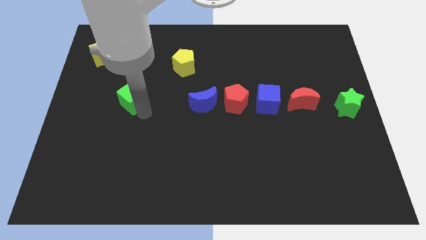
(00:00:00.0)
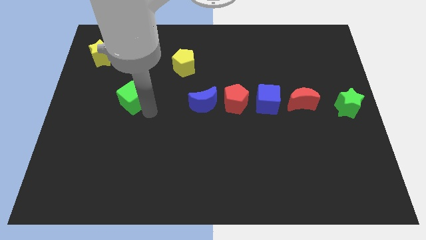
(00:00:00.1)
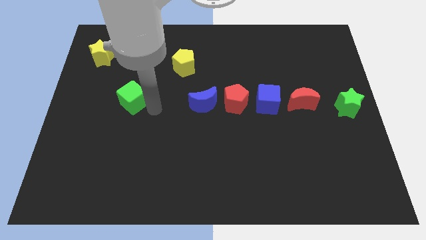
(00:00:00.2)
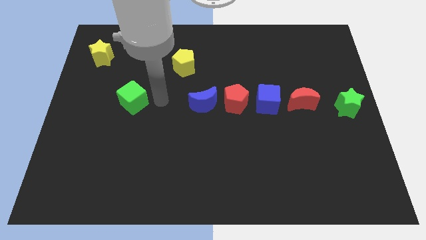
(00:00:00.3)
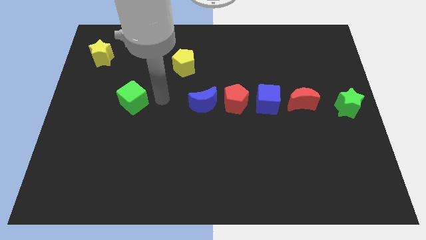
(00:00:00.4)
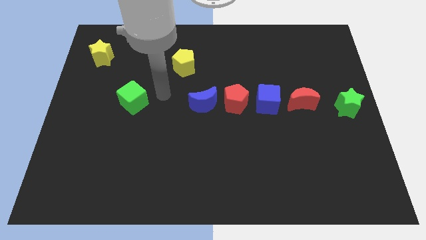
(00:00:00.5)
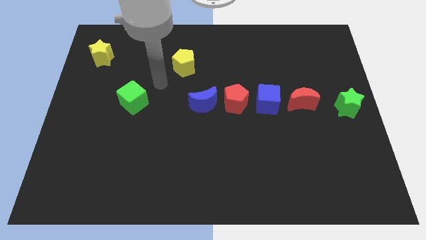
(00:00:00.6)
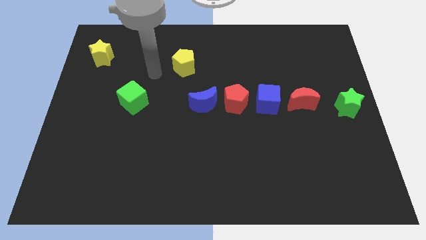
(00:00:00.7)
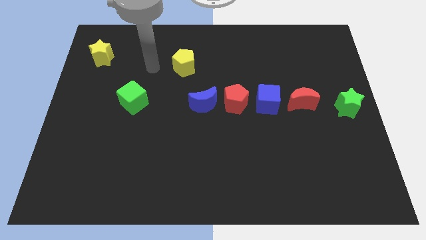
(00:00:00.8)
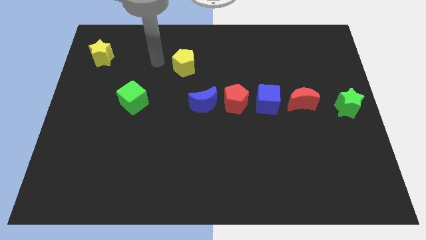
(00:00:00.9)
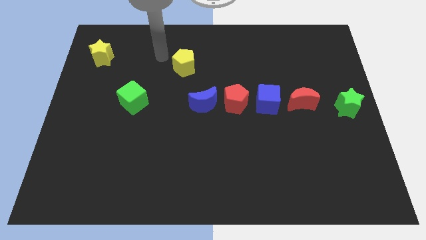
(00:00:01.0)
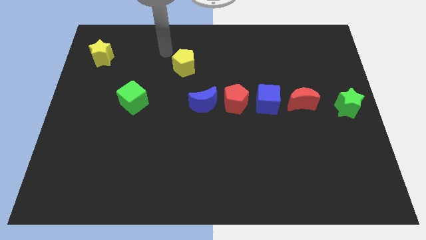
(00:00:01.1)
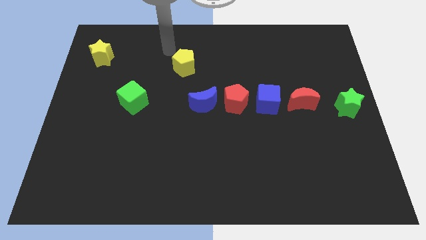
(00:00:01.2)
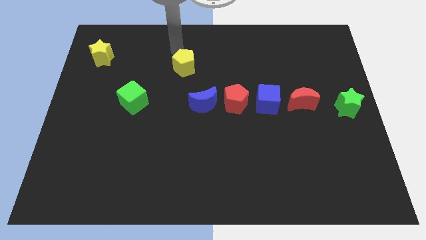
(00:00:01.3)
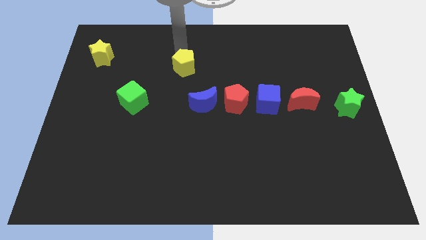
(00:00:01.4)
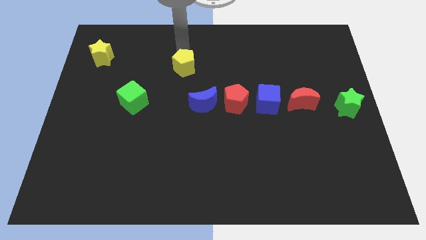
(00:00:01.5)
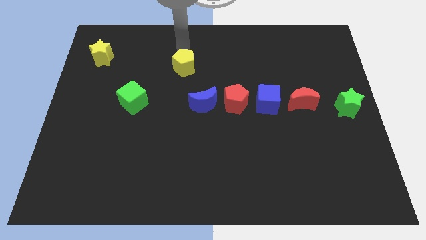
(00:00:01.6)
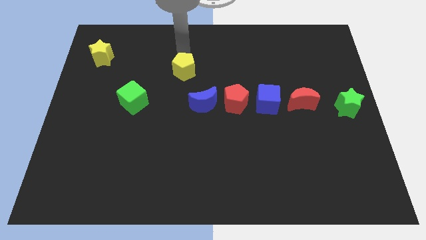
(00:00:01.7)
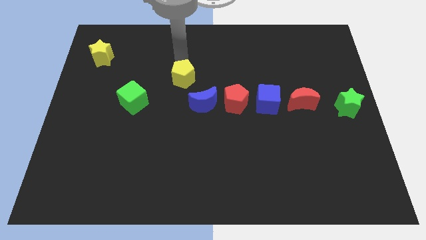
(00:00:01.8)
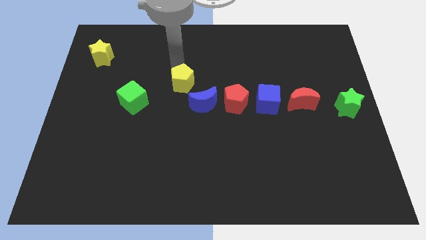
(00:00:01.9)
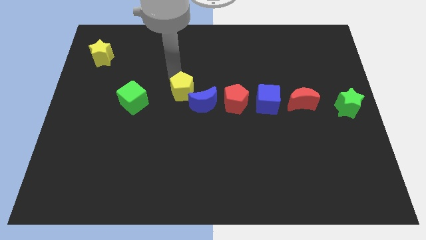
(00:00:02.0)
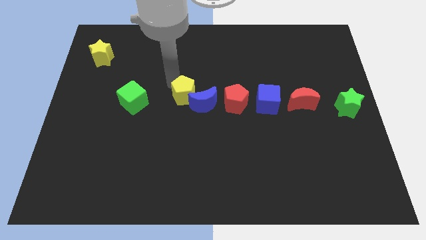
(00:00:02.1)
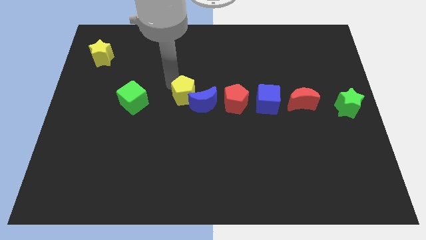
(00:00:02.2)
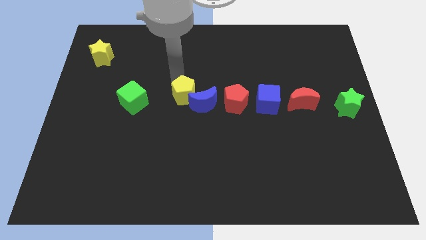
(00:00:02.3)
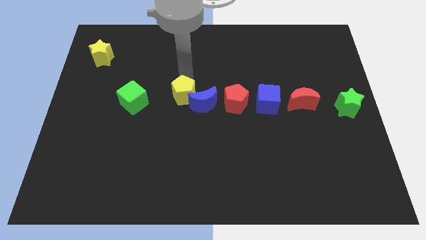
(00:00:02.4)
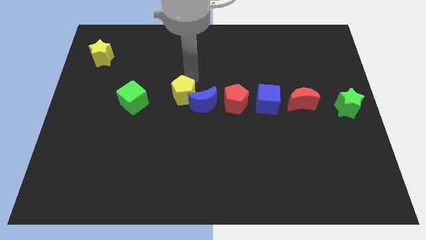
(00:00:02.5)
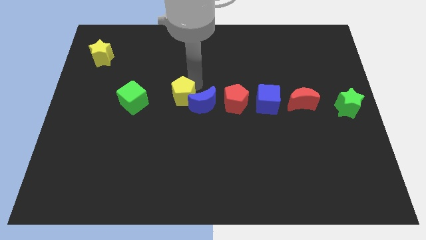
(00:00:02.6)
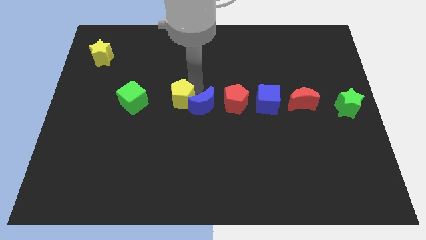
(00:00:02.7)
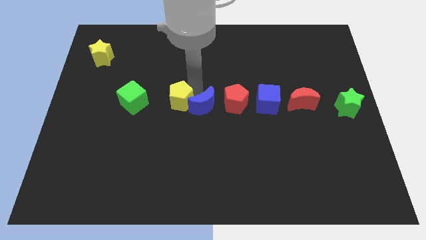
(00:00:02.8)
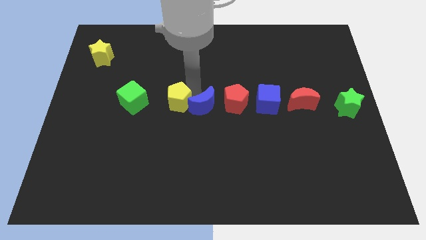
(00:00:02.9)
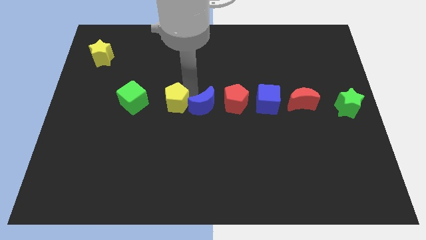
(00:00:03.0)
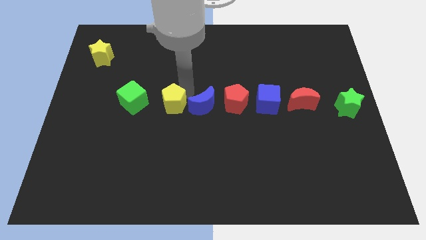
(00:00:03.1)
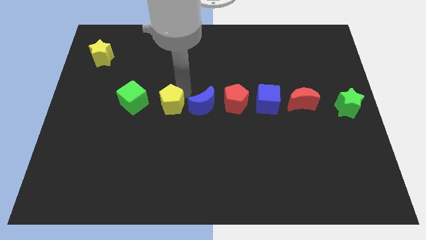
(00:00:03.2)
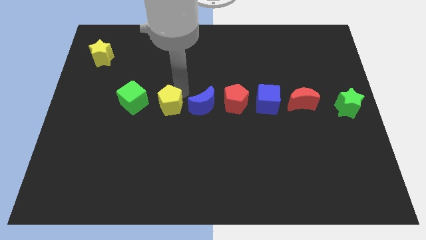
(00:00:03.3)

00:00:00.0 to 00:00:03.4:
slide the yellow pentagon to the left of blue crescent

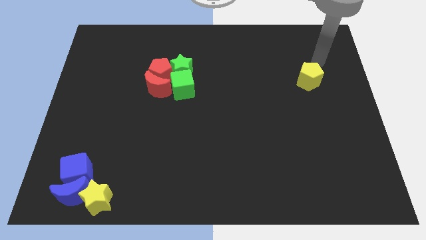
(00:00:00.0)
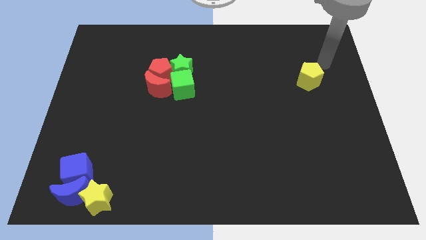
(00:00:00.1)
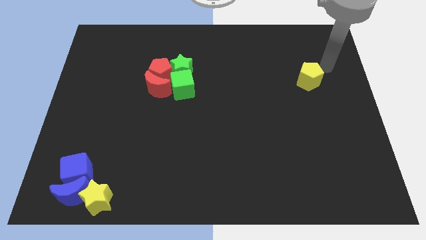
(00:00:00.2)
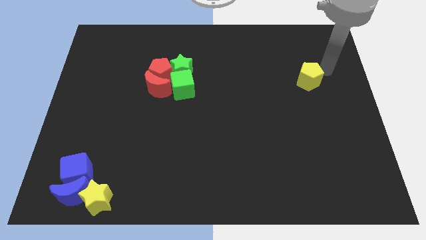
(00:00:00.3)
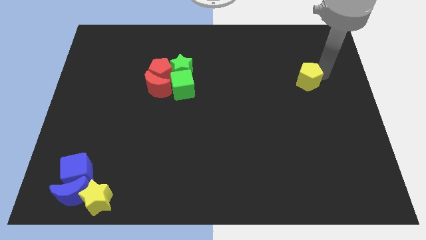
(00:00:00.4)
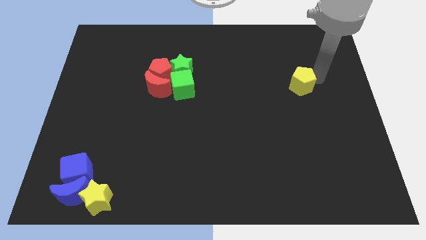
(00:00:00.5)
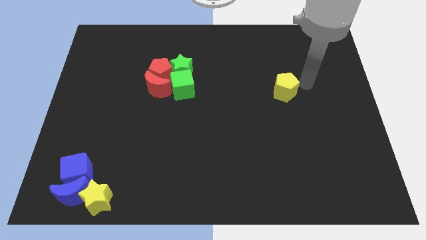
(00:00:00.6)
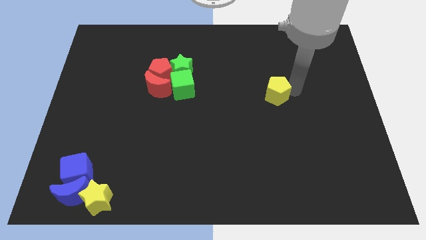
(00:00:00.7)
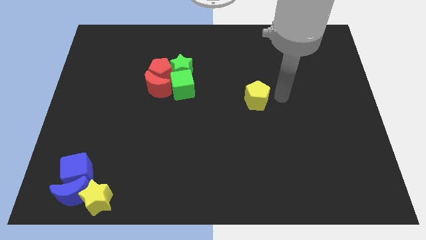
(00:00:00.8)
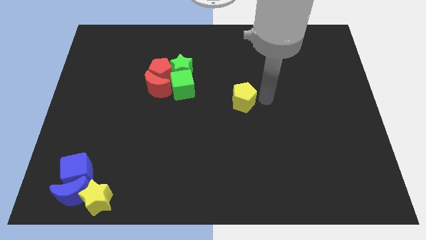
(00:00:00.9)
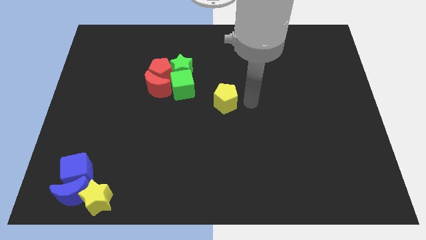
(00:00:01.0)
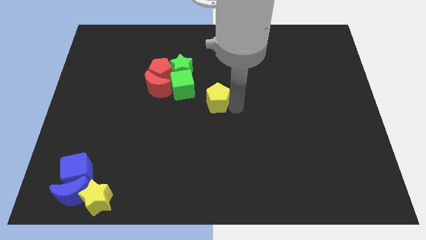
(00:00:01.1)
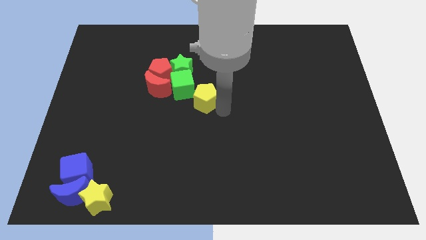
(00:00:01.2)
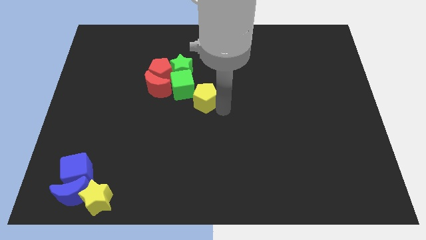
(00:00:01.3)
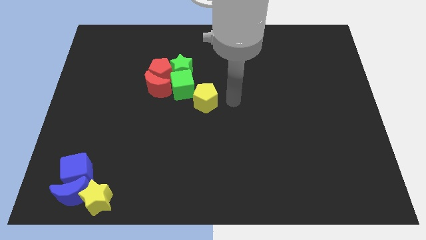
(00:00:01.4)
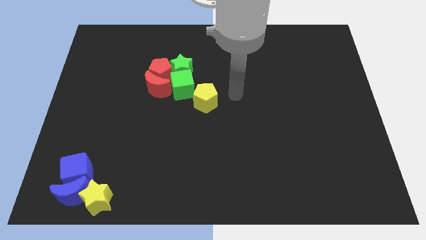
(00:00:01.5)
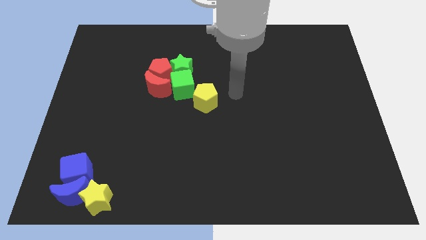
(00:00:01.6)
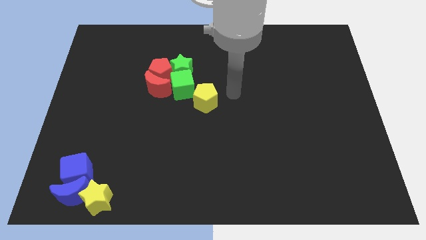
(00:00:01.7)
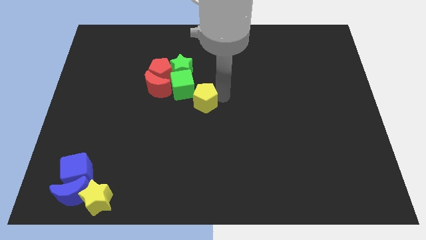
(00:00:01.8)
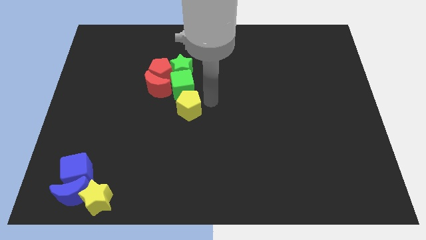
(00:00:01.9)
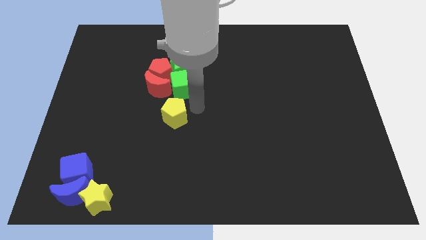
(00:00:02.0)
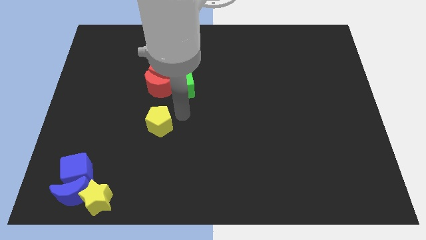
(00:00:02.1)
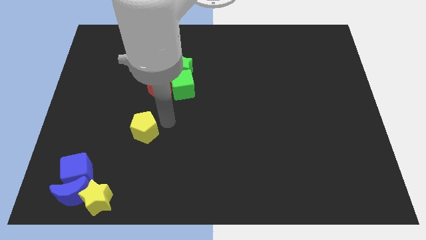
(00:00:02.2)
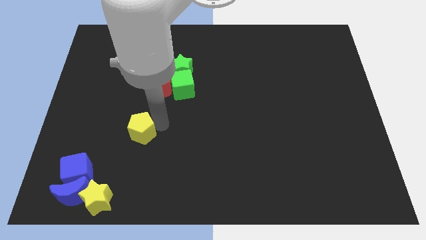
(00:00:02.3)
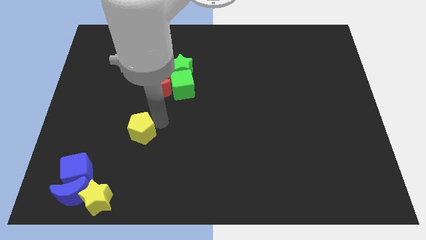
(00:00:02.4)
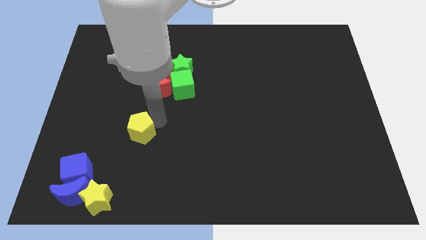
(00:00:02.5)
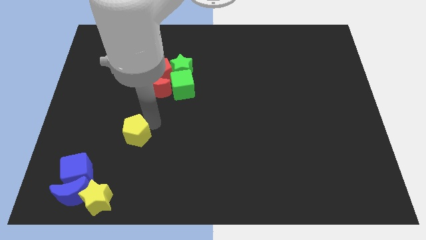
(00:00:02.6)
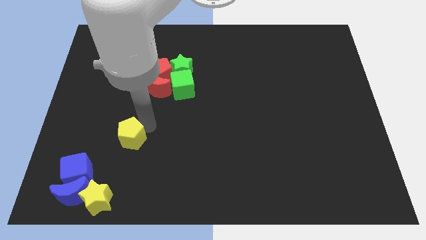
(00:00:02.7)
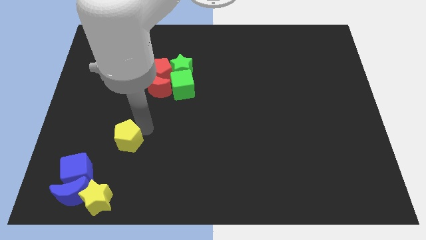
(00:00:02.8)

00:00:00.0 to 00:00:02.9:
slide the yellow pentagon towards the blue cube

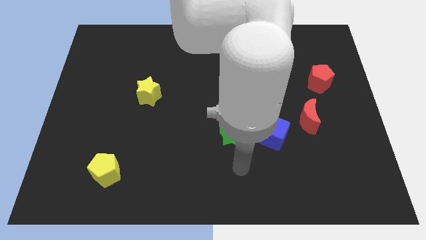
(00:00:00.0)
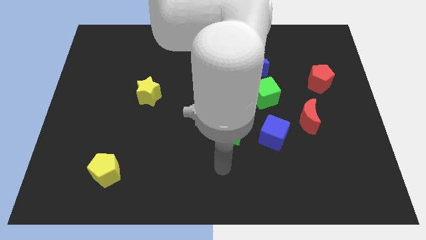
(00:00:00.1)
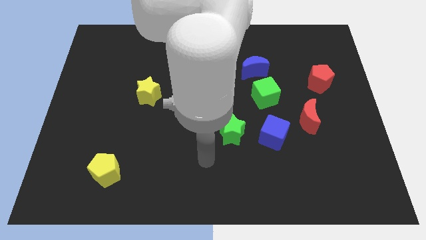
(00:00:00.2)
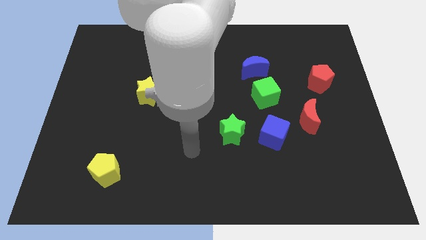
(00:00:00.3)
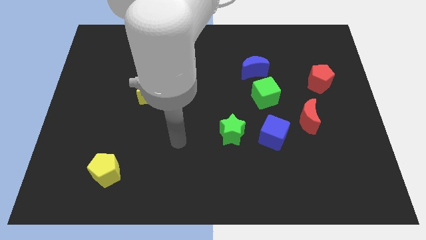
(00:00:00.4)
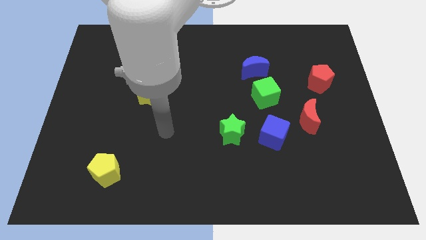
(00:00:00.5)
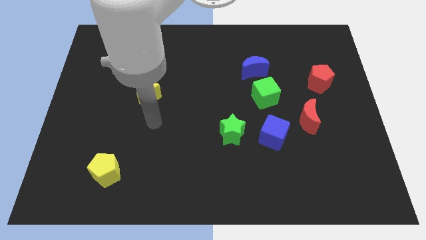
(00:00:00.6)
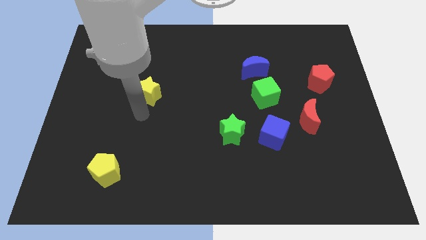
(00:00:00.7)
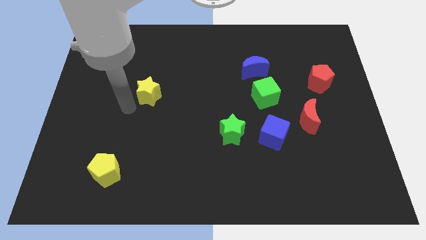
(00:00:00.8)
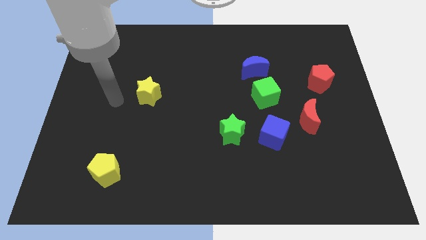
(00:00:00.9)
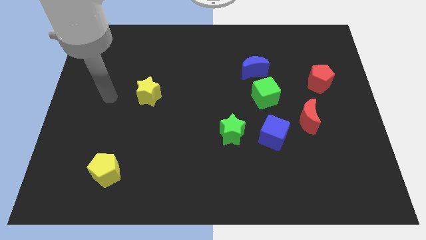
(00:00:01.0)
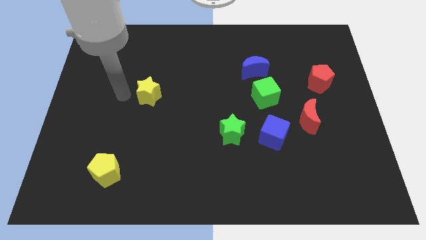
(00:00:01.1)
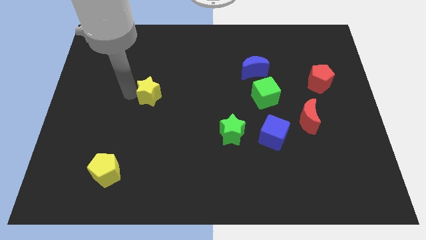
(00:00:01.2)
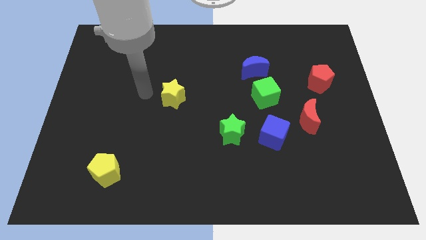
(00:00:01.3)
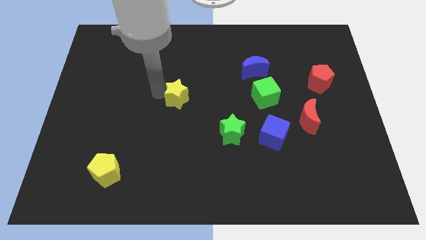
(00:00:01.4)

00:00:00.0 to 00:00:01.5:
push the yellow star slightly to the right

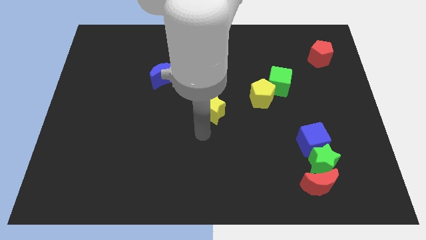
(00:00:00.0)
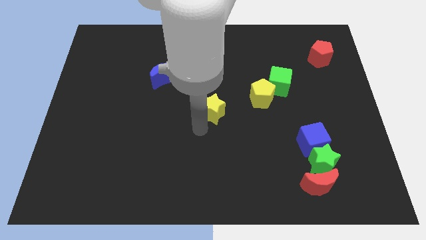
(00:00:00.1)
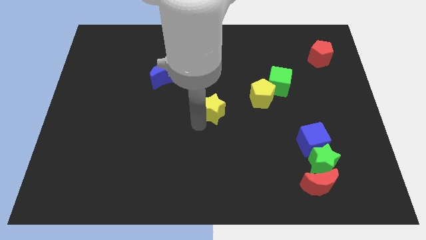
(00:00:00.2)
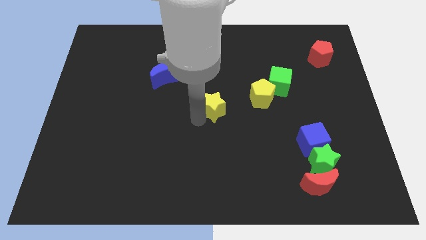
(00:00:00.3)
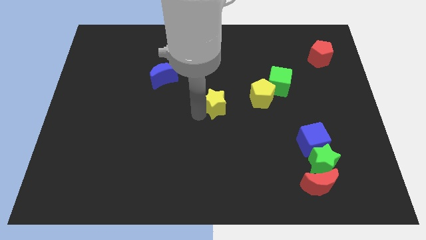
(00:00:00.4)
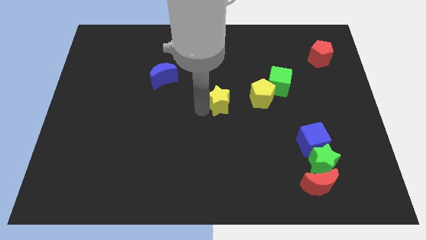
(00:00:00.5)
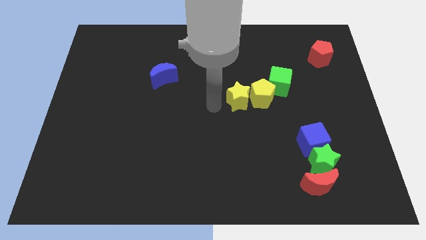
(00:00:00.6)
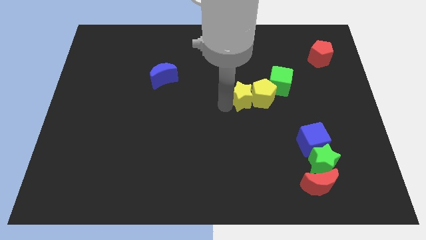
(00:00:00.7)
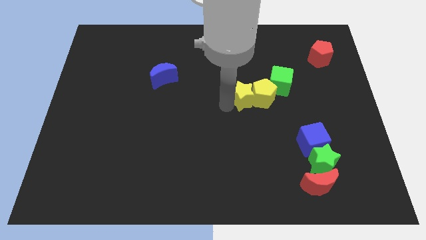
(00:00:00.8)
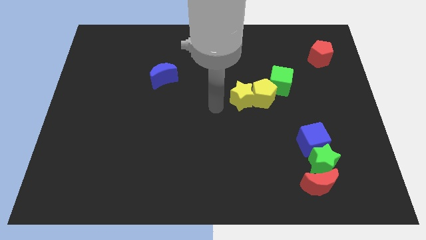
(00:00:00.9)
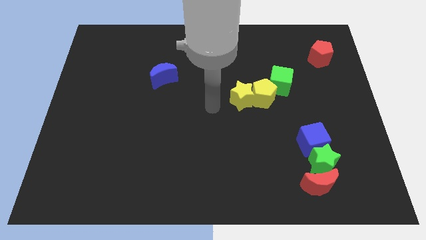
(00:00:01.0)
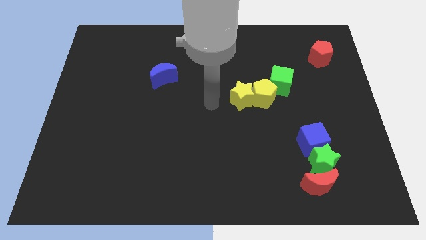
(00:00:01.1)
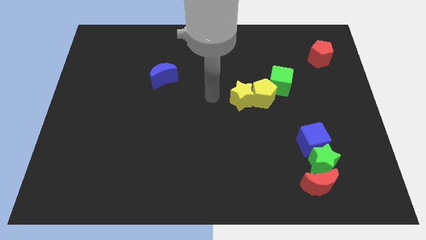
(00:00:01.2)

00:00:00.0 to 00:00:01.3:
move the yellow star in to yellow pentagon
